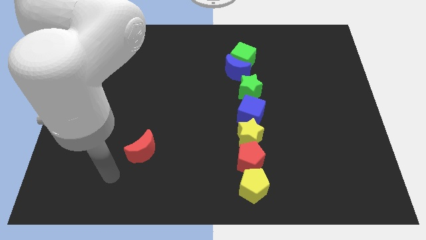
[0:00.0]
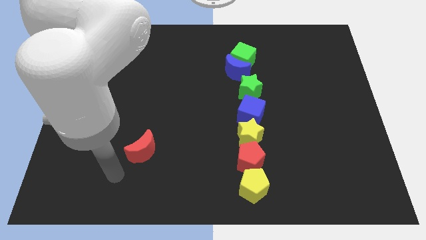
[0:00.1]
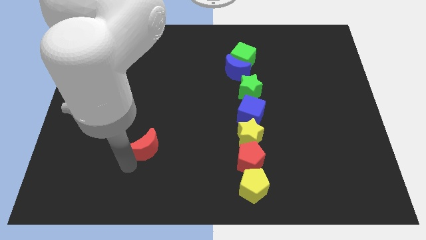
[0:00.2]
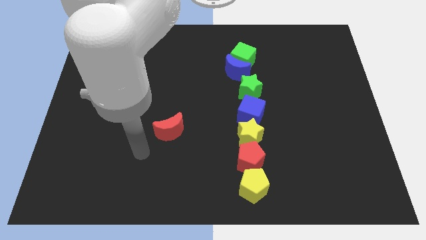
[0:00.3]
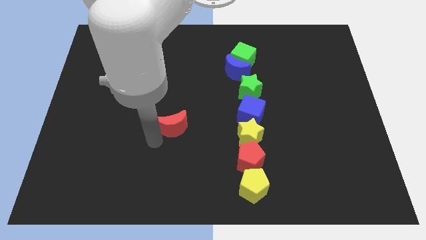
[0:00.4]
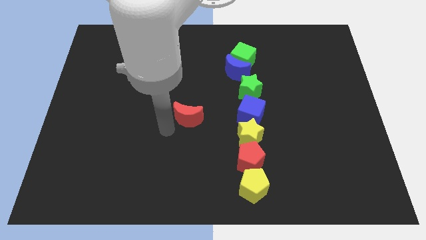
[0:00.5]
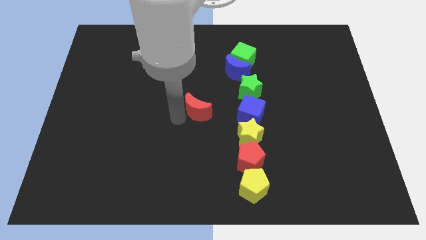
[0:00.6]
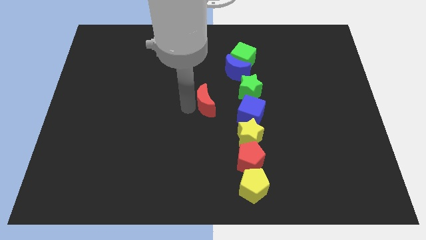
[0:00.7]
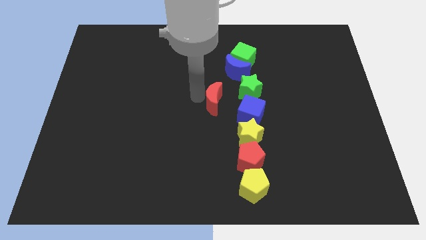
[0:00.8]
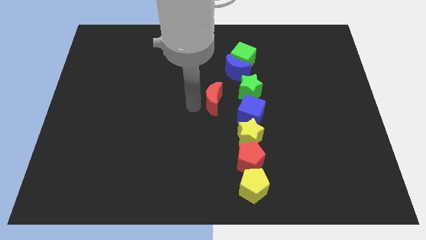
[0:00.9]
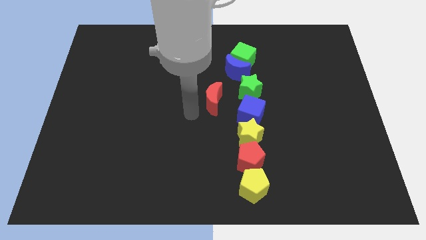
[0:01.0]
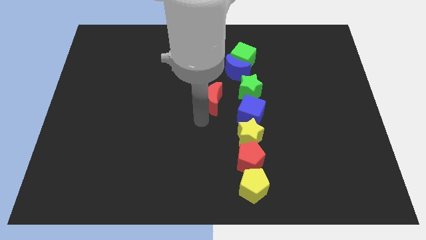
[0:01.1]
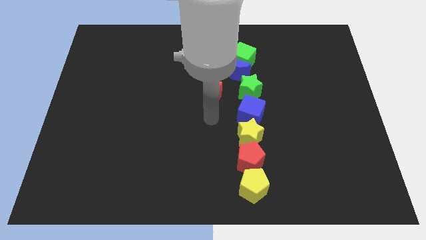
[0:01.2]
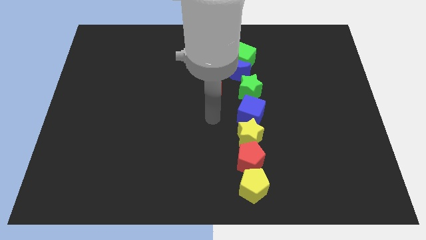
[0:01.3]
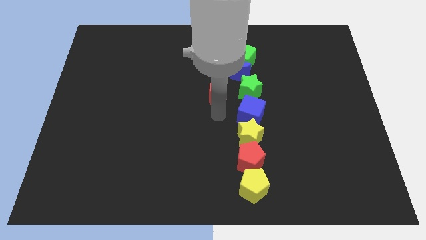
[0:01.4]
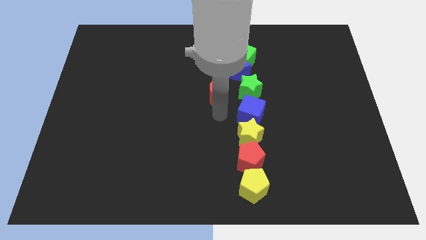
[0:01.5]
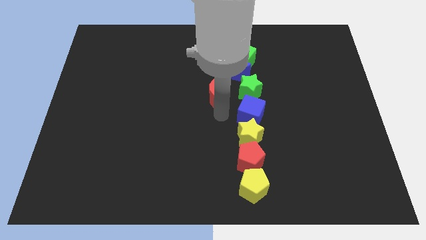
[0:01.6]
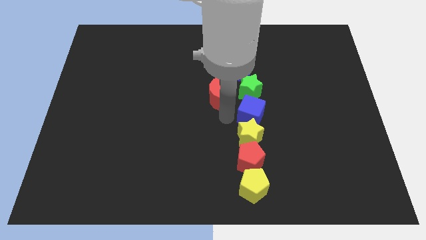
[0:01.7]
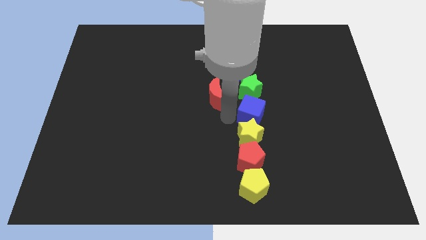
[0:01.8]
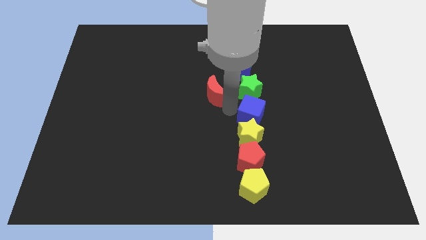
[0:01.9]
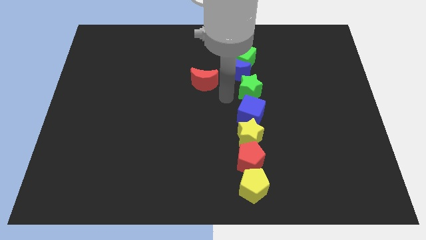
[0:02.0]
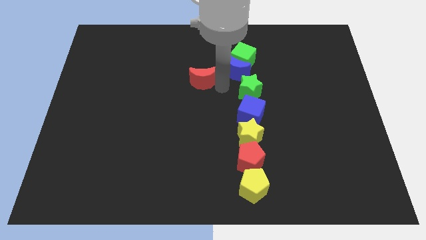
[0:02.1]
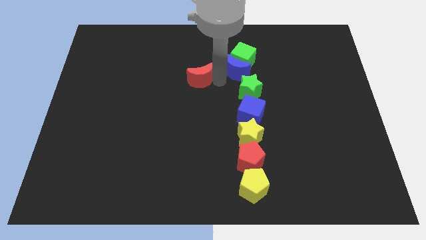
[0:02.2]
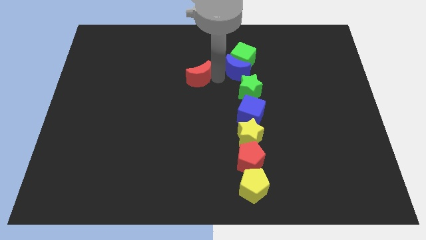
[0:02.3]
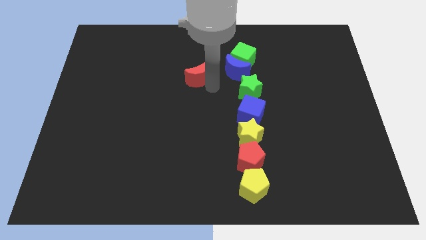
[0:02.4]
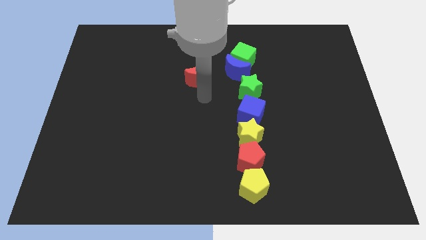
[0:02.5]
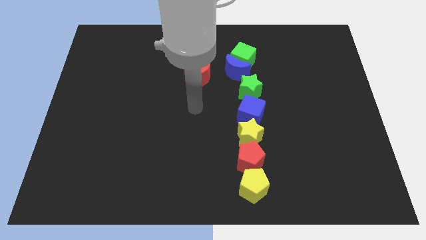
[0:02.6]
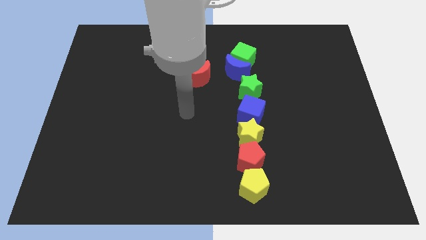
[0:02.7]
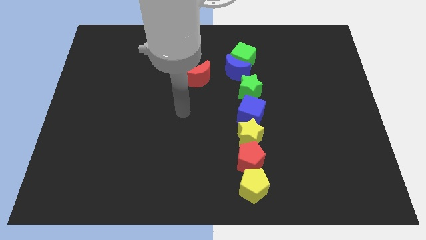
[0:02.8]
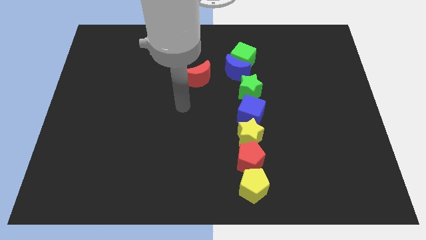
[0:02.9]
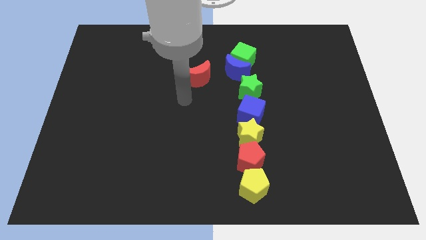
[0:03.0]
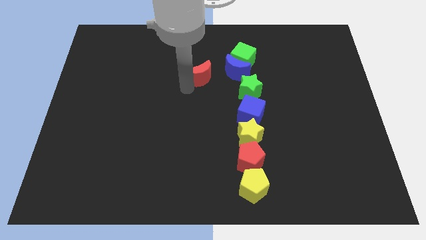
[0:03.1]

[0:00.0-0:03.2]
slide the red moon to the left side of the blue moon

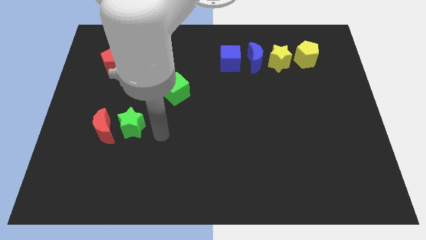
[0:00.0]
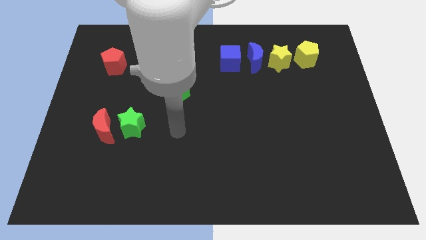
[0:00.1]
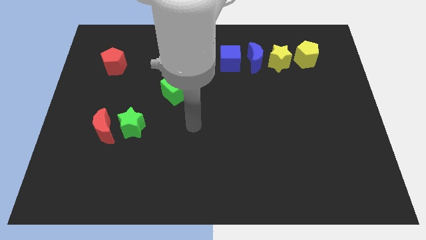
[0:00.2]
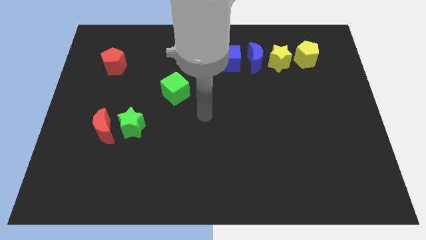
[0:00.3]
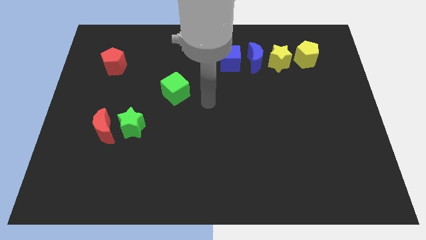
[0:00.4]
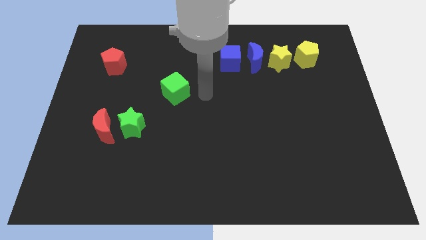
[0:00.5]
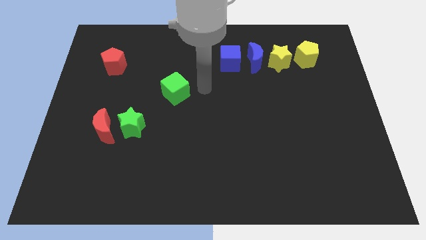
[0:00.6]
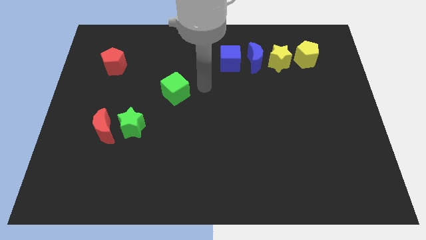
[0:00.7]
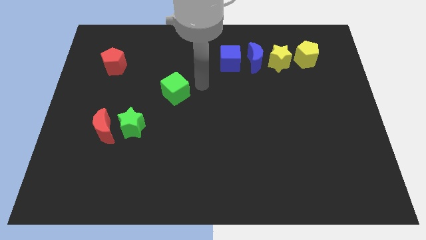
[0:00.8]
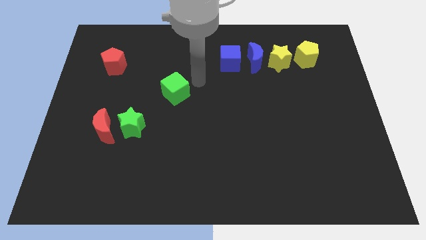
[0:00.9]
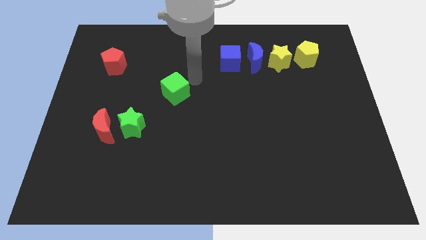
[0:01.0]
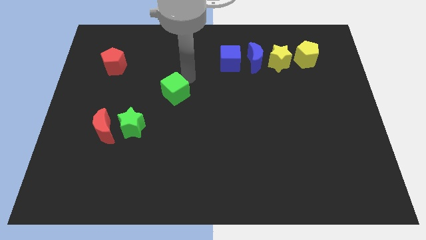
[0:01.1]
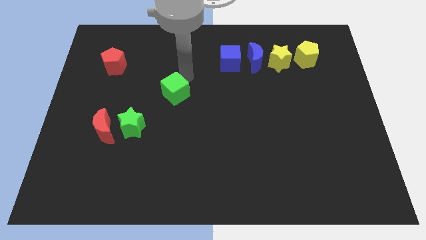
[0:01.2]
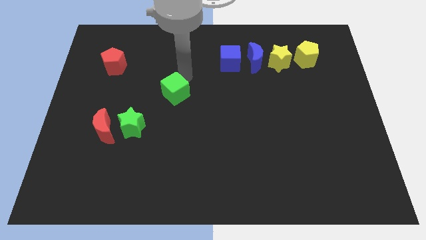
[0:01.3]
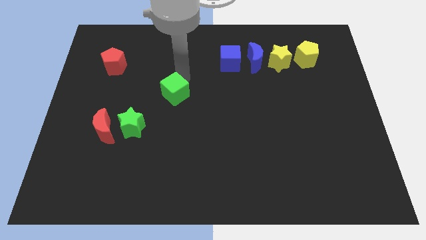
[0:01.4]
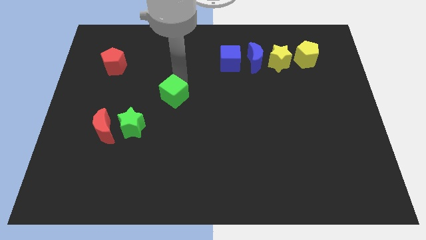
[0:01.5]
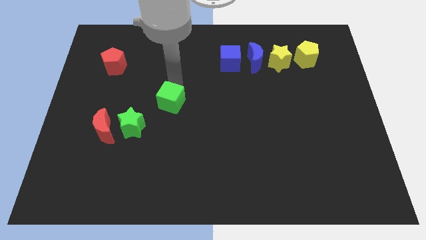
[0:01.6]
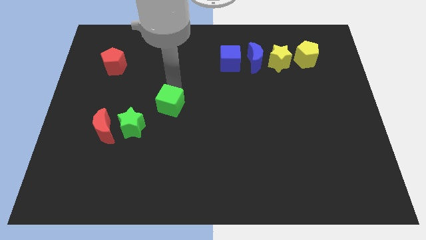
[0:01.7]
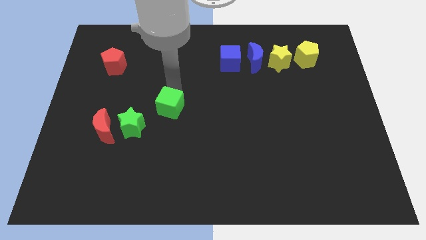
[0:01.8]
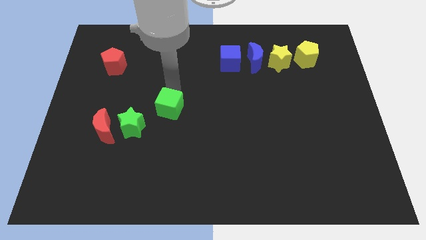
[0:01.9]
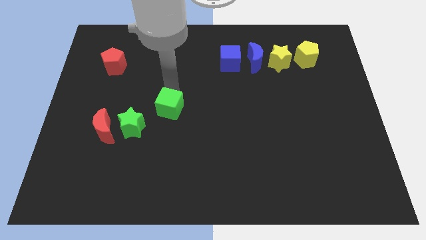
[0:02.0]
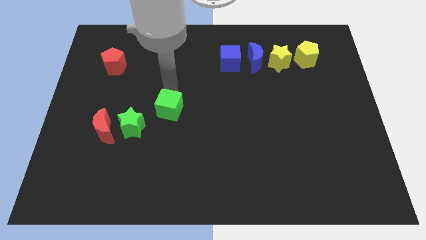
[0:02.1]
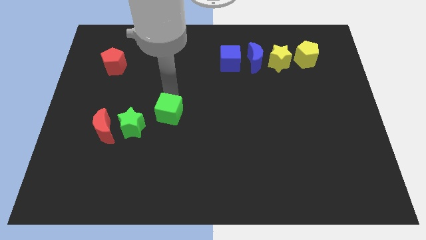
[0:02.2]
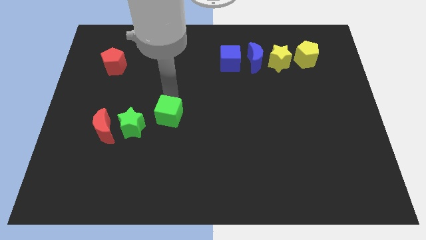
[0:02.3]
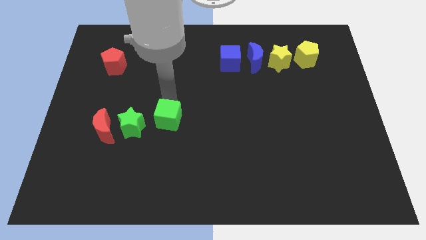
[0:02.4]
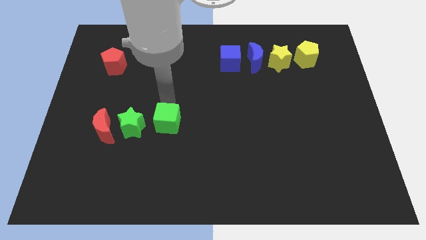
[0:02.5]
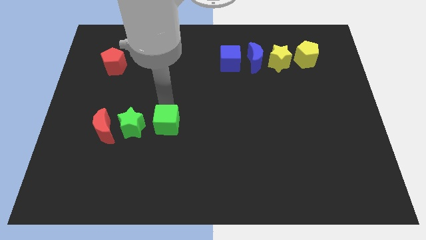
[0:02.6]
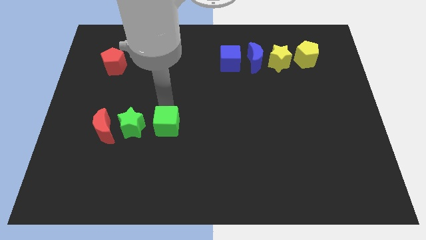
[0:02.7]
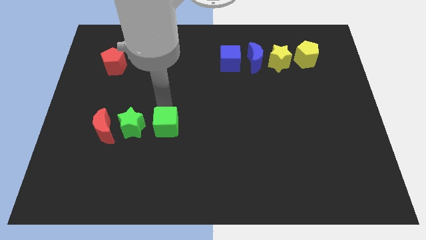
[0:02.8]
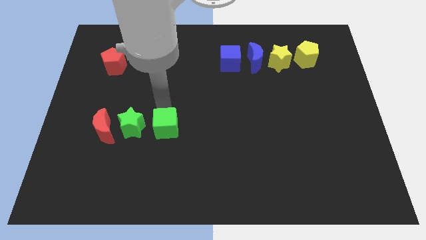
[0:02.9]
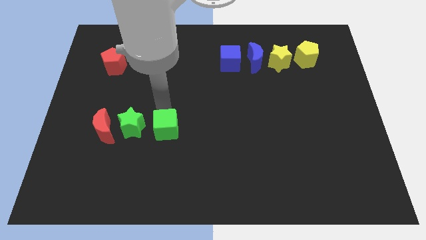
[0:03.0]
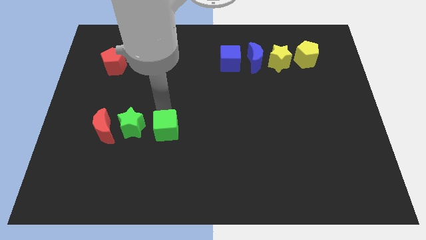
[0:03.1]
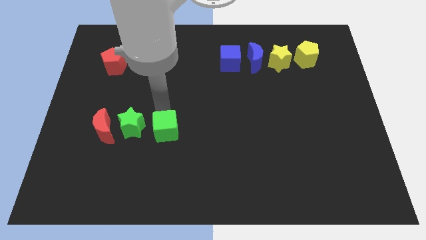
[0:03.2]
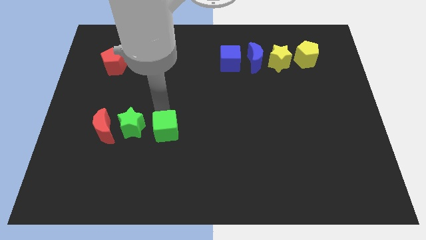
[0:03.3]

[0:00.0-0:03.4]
place the green cube to the right of the green star

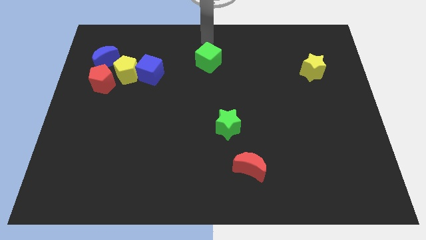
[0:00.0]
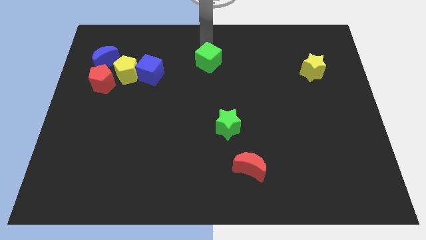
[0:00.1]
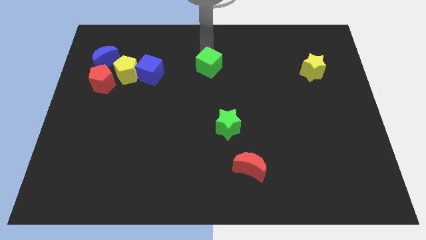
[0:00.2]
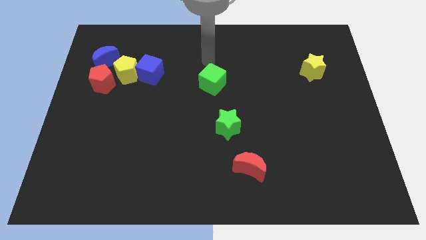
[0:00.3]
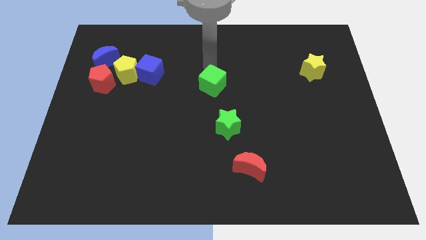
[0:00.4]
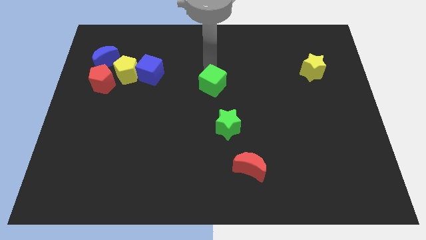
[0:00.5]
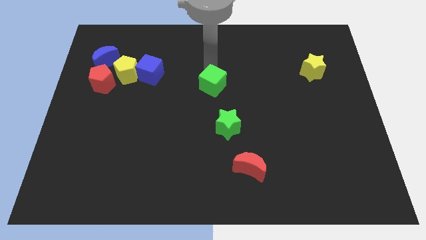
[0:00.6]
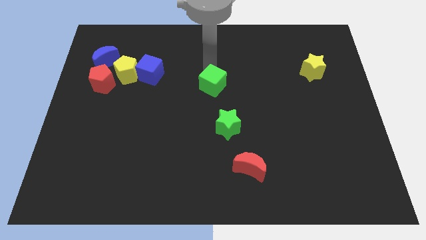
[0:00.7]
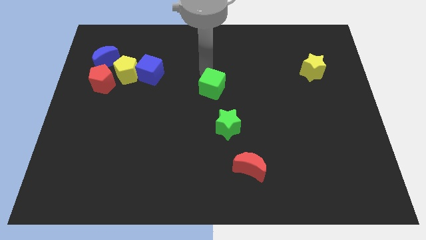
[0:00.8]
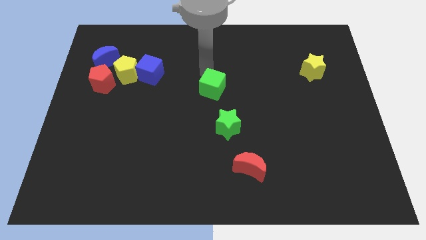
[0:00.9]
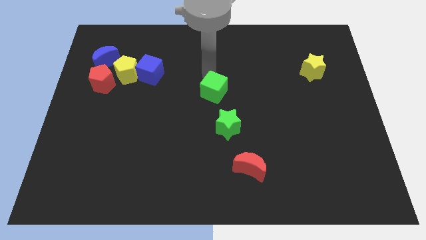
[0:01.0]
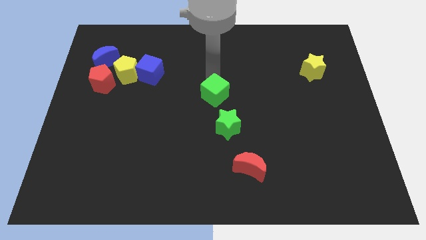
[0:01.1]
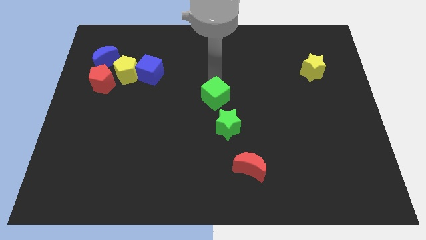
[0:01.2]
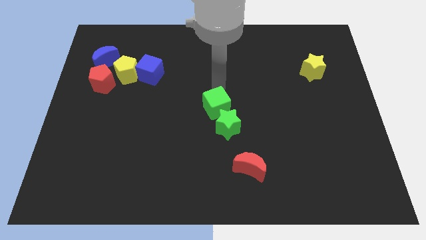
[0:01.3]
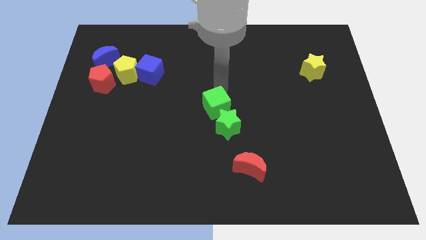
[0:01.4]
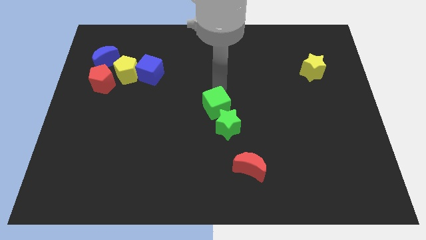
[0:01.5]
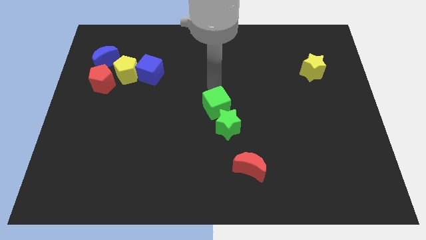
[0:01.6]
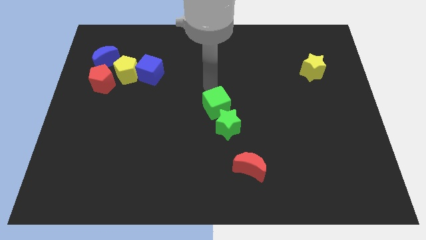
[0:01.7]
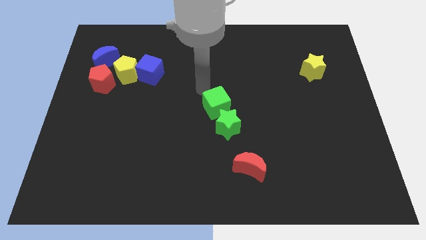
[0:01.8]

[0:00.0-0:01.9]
move the green cube towards the top of the green star

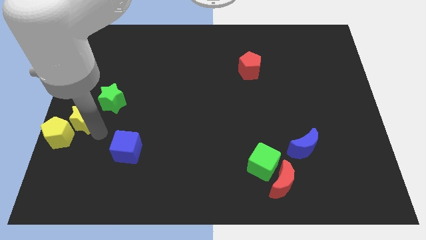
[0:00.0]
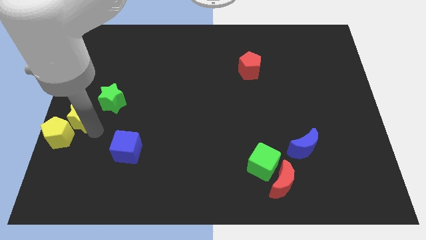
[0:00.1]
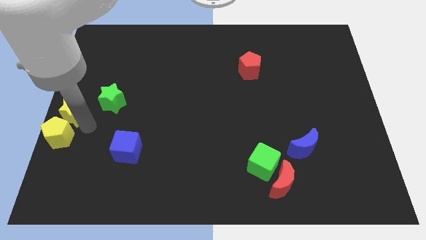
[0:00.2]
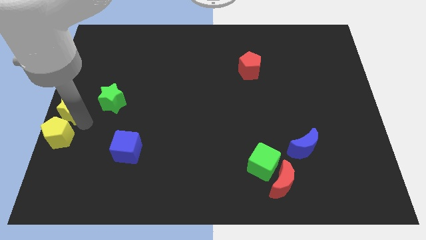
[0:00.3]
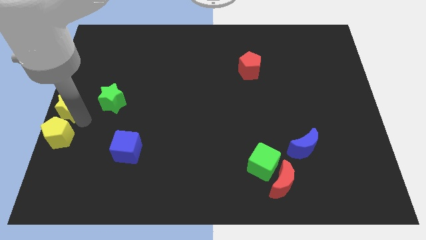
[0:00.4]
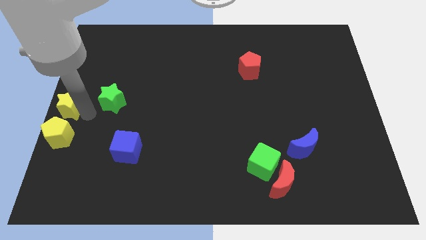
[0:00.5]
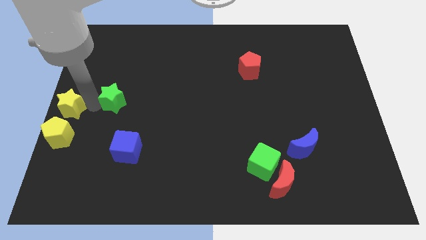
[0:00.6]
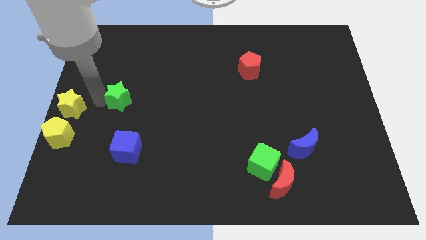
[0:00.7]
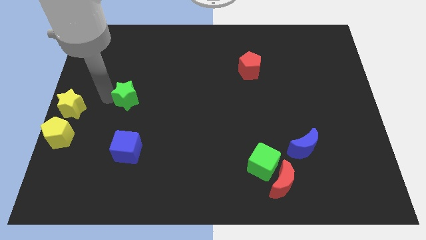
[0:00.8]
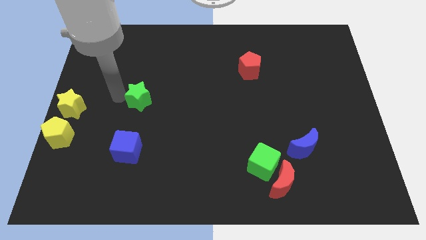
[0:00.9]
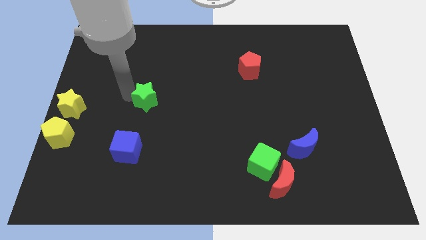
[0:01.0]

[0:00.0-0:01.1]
separate yellow and green stars
